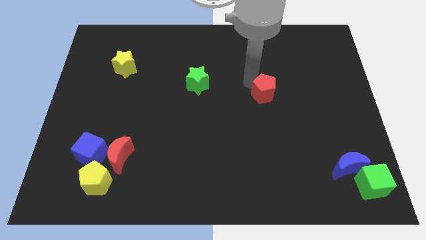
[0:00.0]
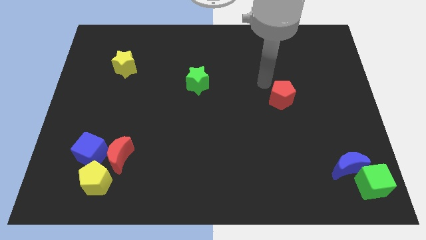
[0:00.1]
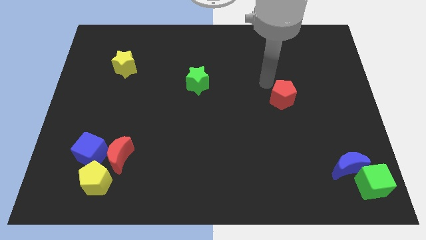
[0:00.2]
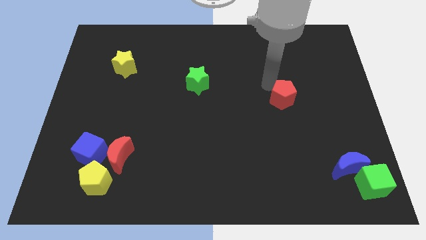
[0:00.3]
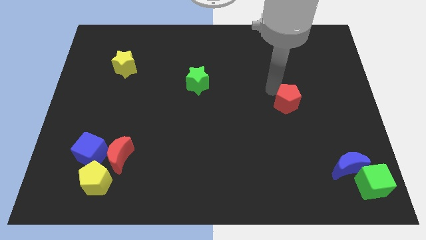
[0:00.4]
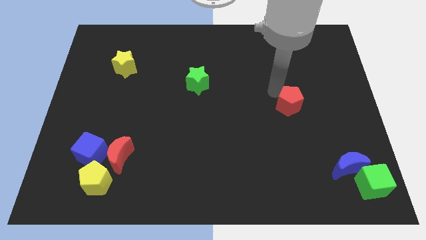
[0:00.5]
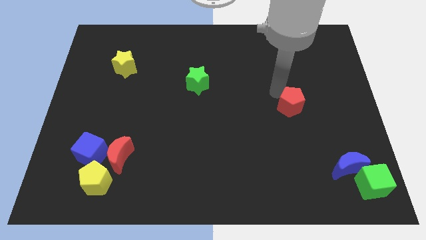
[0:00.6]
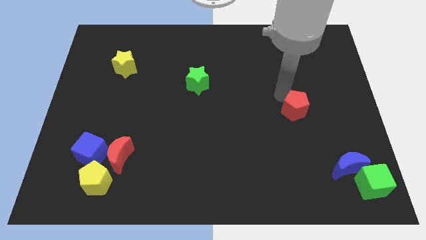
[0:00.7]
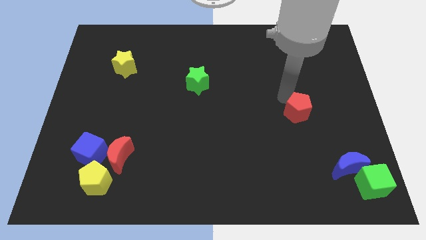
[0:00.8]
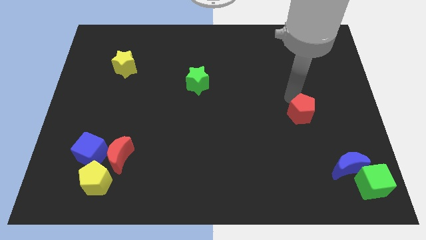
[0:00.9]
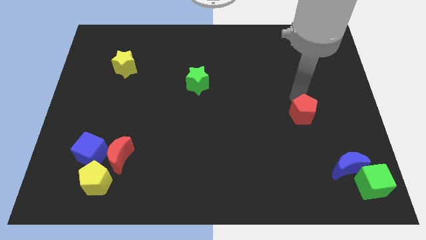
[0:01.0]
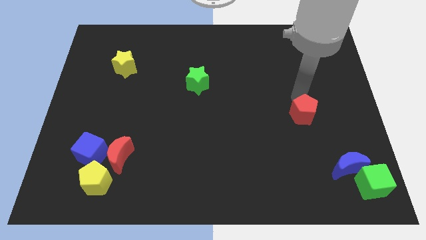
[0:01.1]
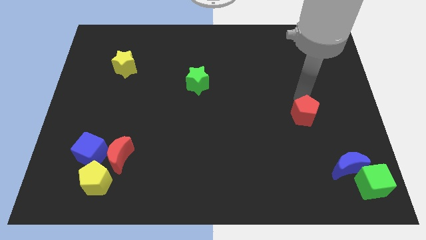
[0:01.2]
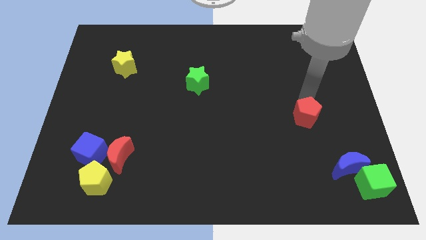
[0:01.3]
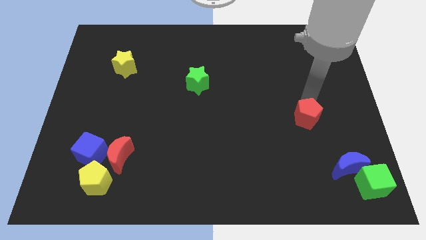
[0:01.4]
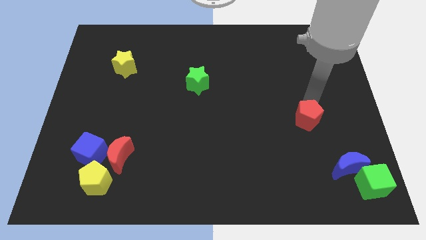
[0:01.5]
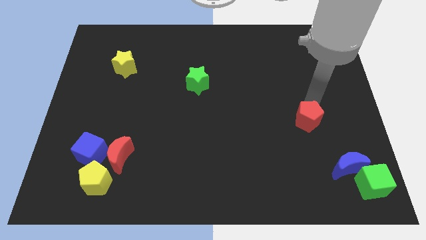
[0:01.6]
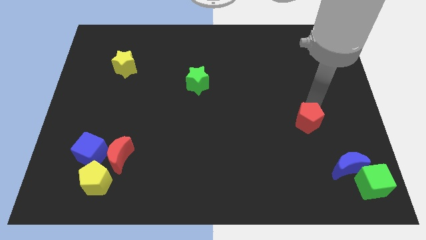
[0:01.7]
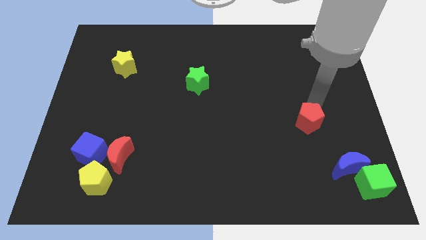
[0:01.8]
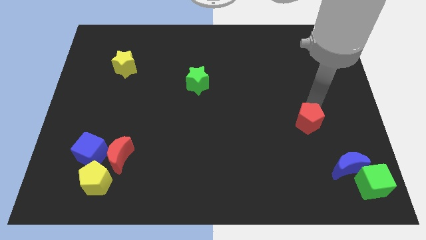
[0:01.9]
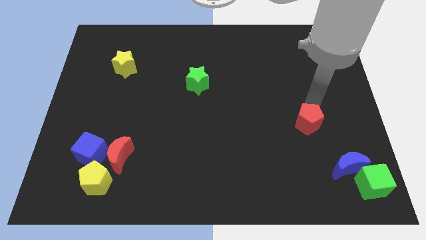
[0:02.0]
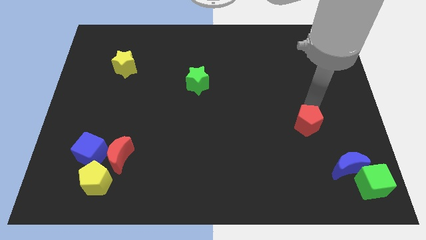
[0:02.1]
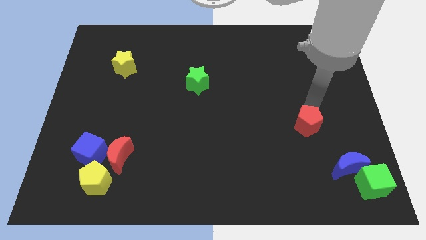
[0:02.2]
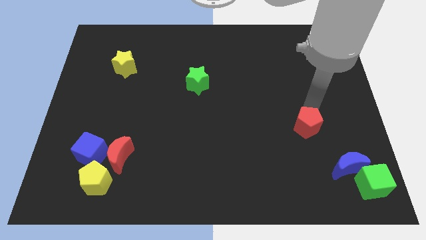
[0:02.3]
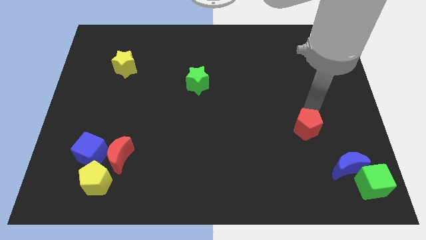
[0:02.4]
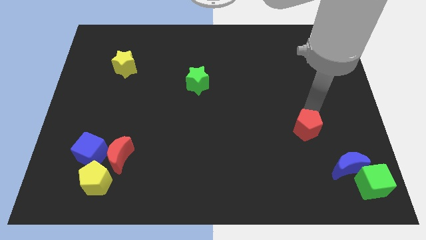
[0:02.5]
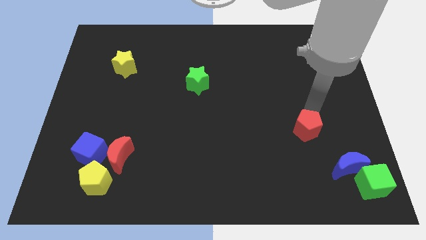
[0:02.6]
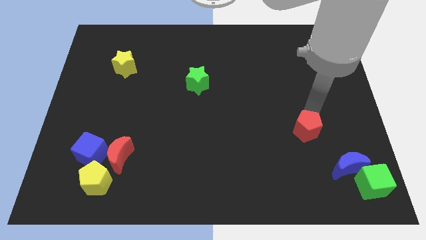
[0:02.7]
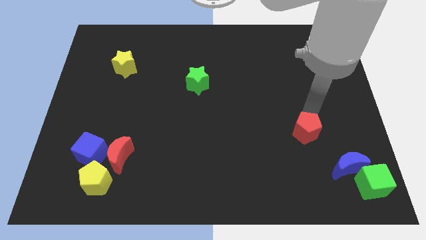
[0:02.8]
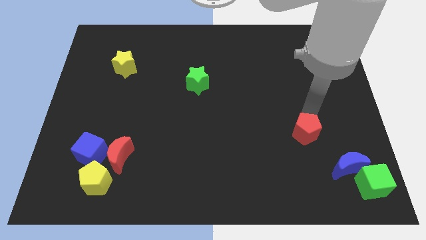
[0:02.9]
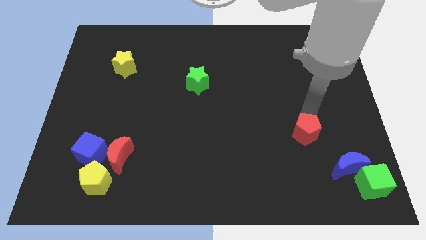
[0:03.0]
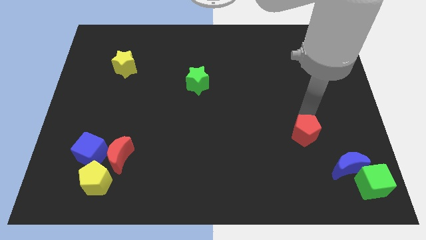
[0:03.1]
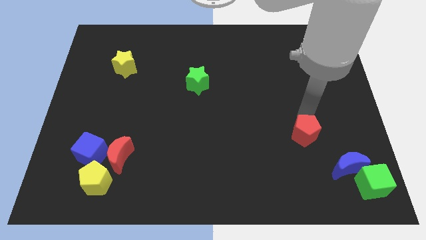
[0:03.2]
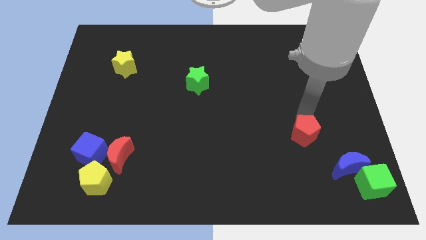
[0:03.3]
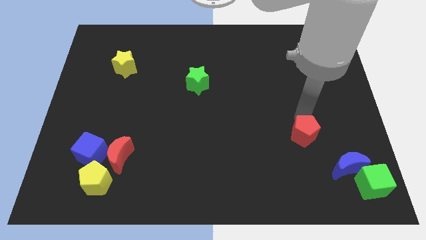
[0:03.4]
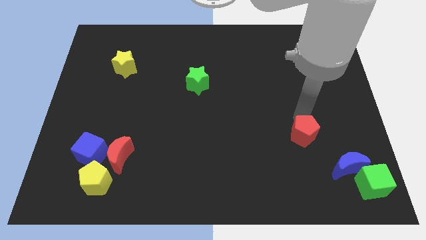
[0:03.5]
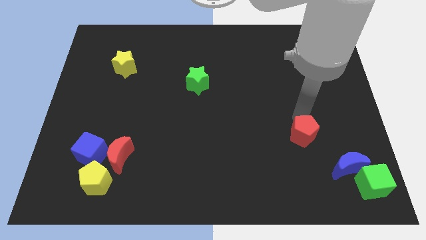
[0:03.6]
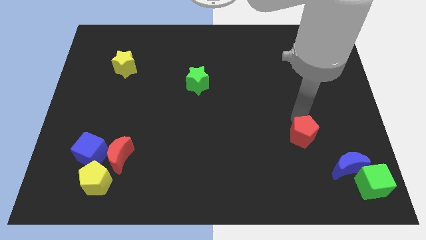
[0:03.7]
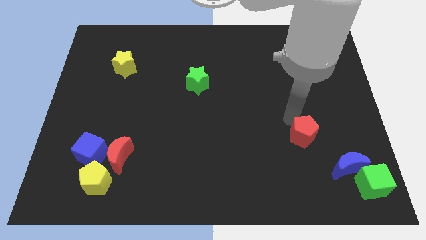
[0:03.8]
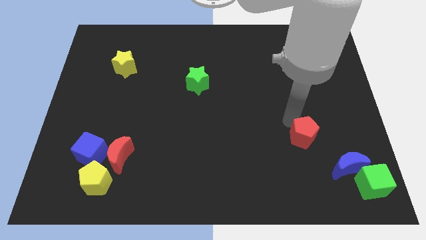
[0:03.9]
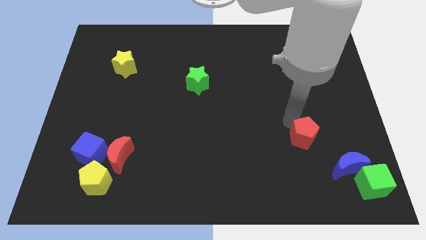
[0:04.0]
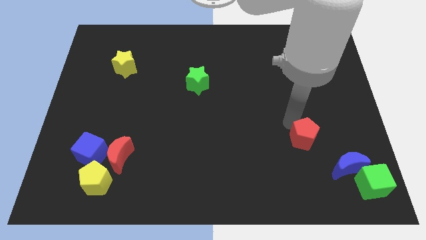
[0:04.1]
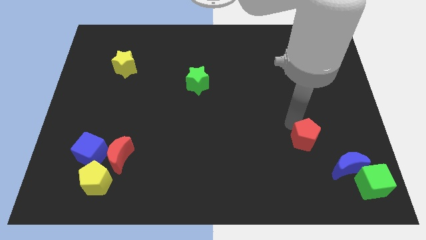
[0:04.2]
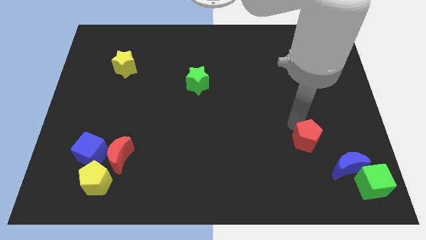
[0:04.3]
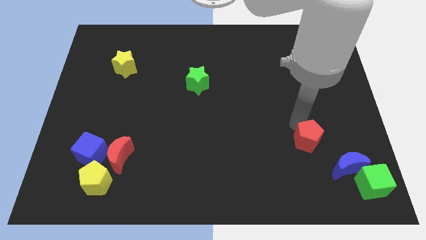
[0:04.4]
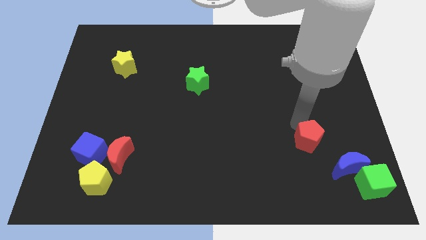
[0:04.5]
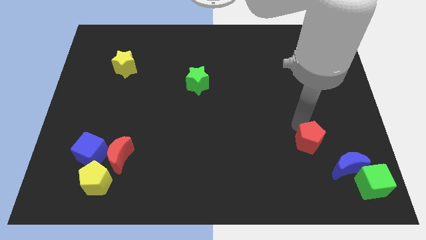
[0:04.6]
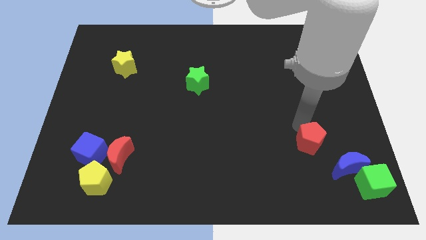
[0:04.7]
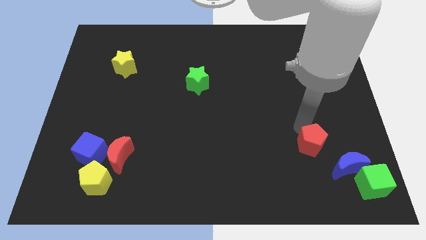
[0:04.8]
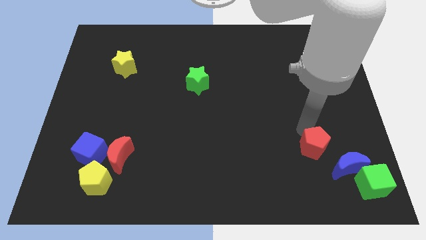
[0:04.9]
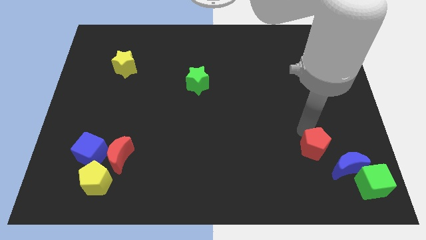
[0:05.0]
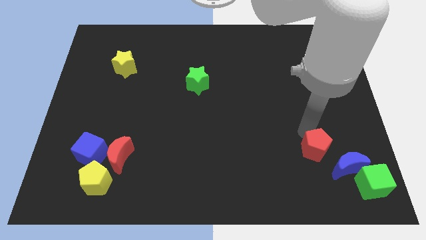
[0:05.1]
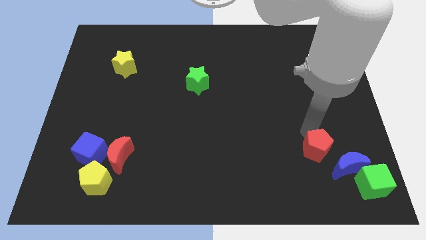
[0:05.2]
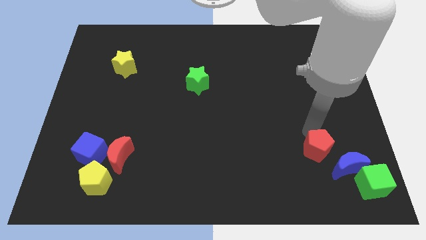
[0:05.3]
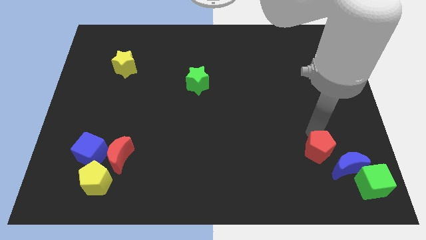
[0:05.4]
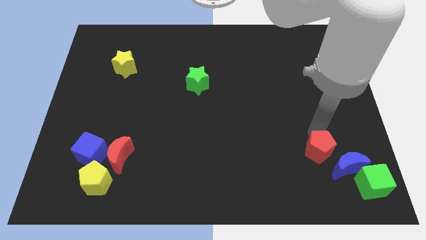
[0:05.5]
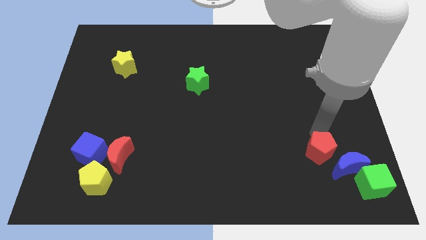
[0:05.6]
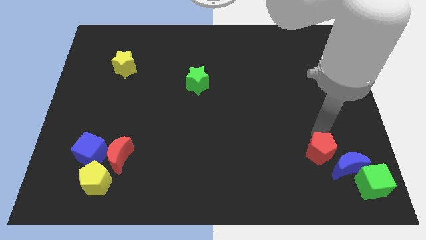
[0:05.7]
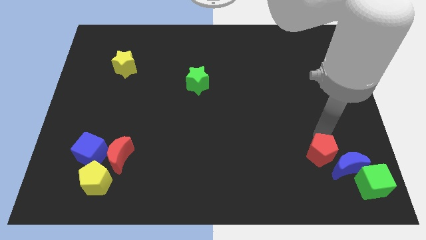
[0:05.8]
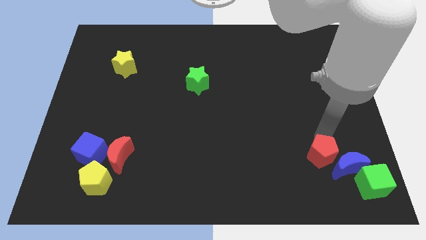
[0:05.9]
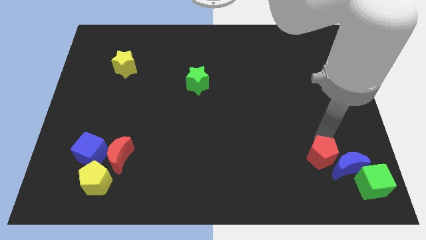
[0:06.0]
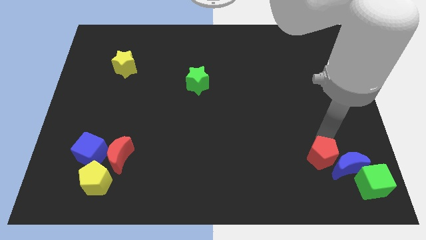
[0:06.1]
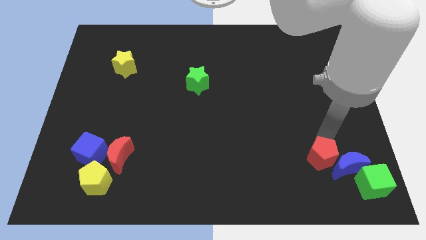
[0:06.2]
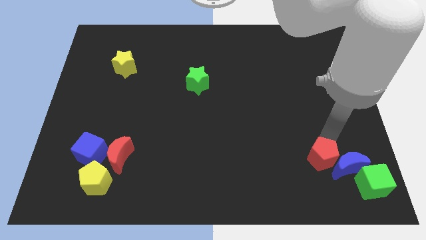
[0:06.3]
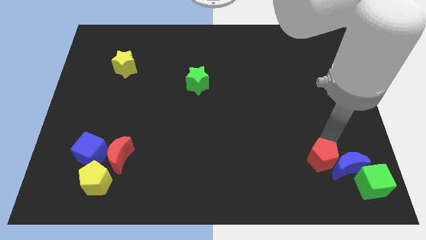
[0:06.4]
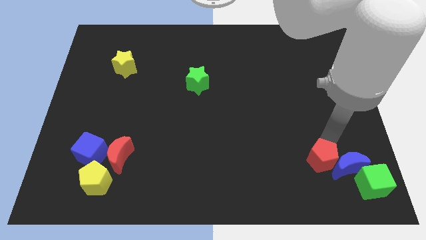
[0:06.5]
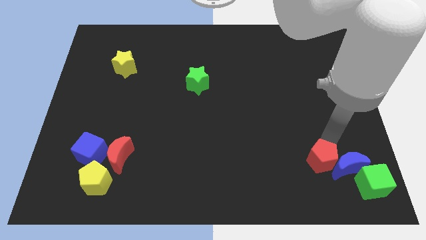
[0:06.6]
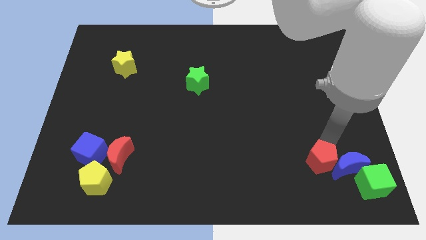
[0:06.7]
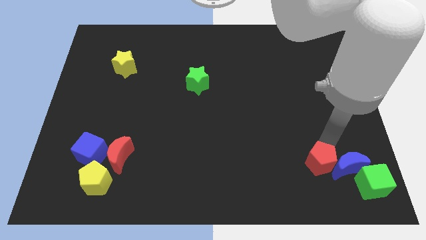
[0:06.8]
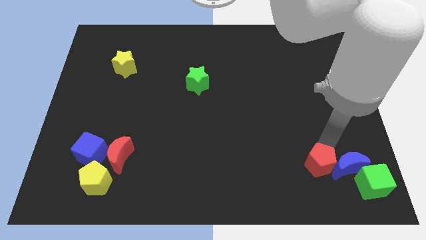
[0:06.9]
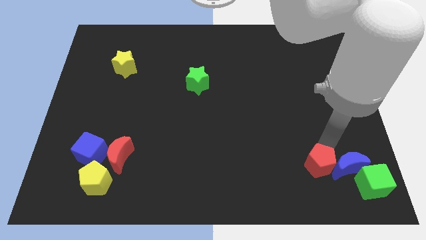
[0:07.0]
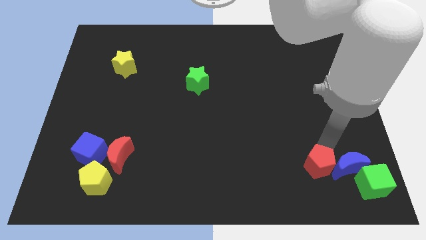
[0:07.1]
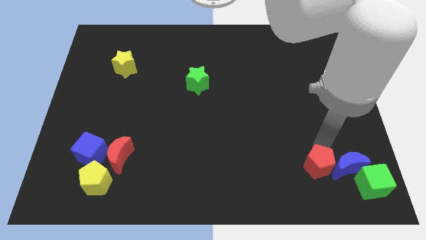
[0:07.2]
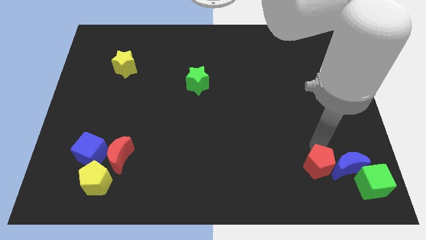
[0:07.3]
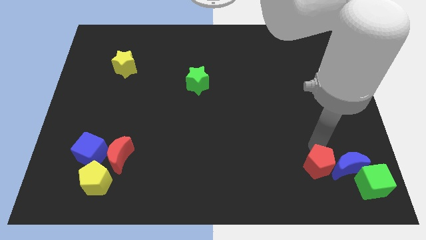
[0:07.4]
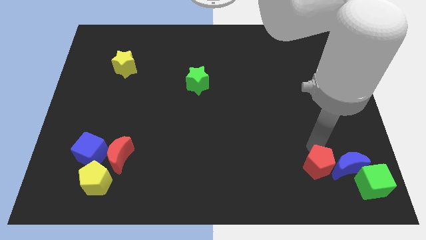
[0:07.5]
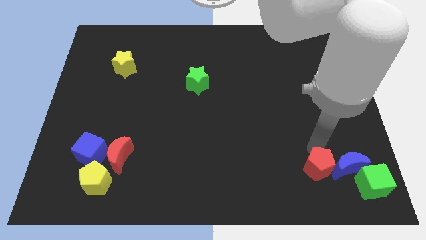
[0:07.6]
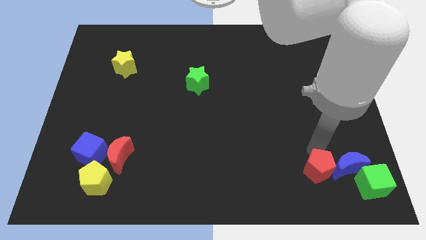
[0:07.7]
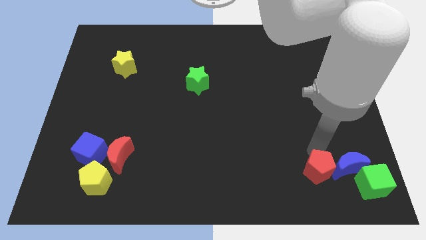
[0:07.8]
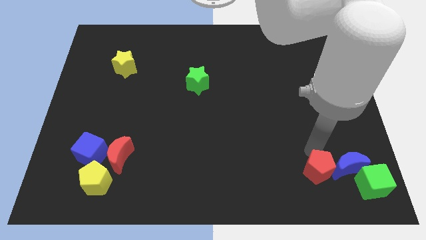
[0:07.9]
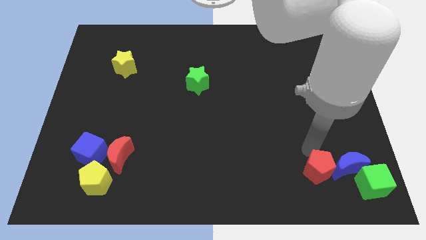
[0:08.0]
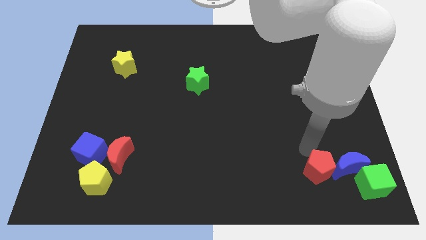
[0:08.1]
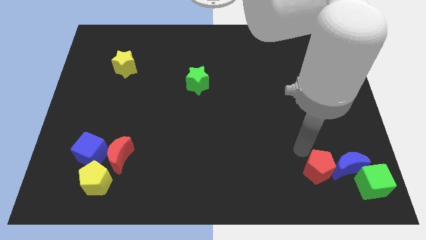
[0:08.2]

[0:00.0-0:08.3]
move the red pentagon to the left of the blue crescent

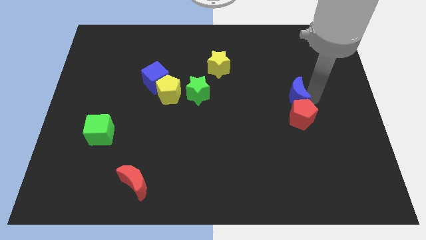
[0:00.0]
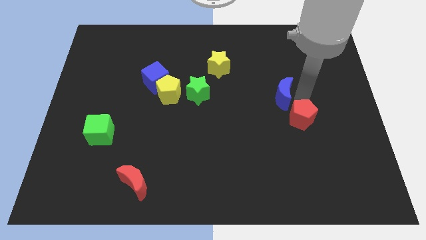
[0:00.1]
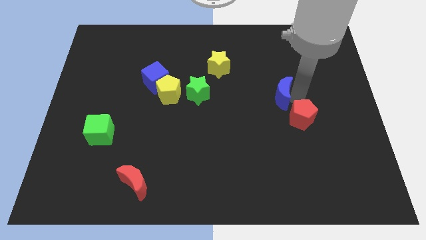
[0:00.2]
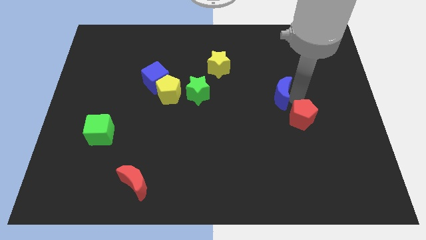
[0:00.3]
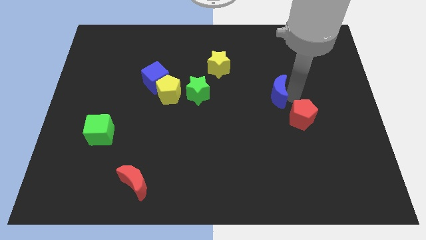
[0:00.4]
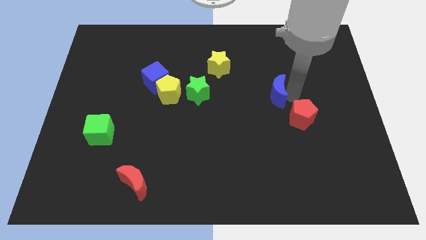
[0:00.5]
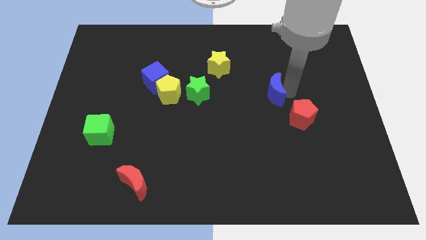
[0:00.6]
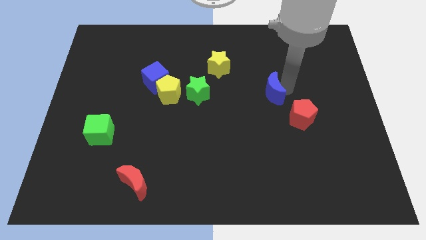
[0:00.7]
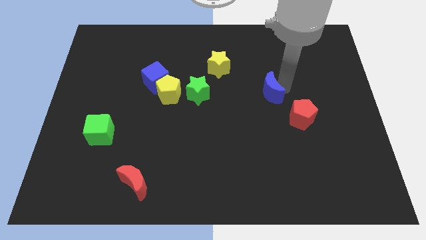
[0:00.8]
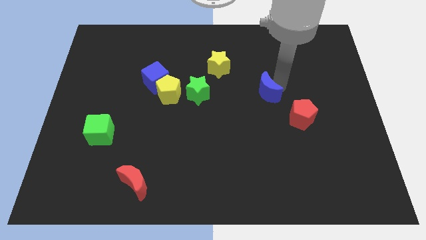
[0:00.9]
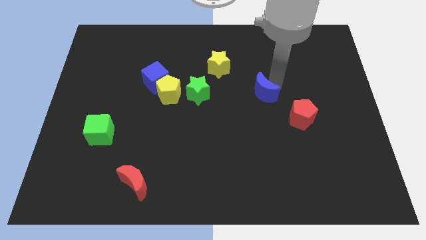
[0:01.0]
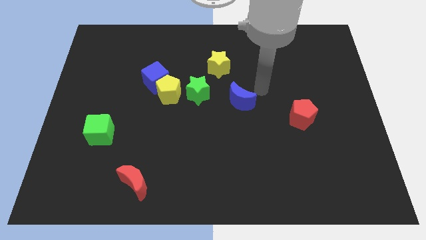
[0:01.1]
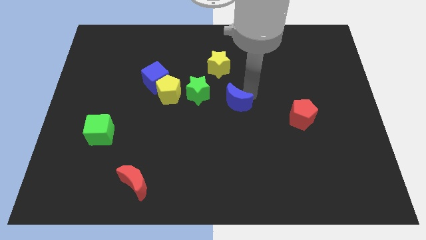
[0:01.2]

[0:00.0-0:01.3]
move blue crescent to the center of the board
